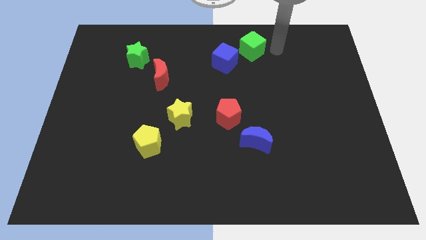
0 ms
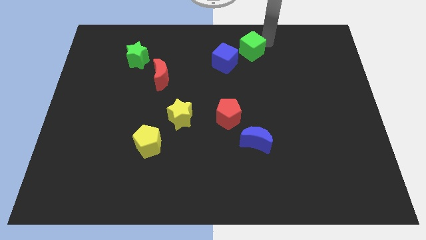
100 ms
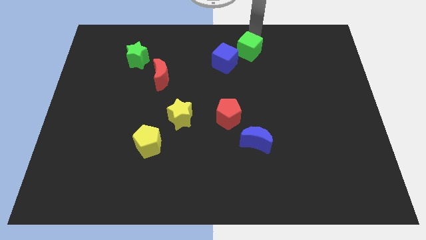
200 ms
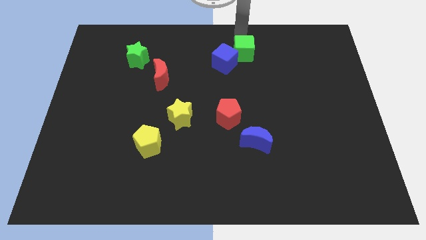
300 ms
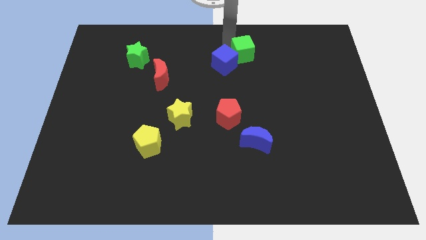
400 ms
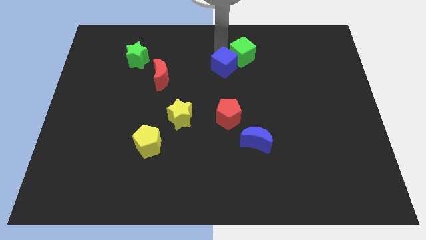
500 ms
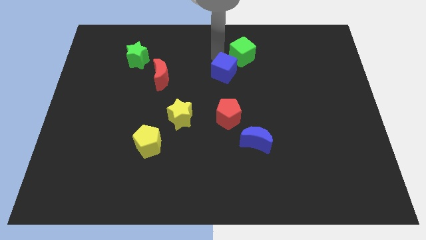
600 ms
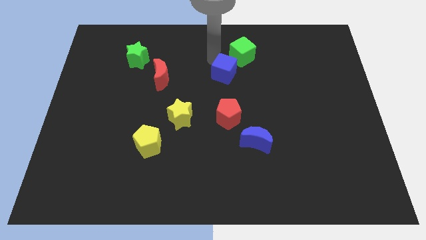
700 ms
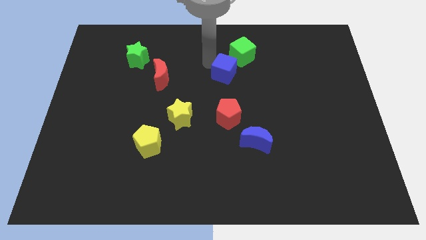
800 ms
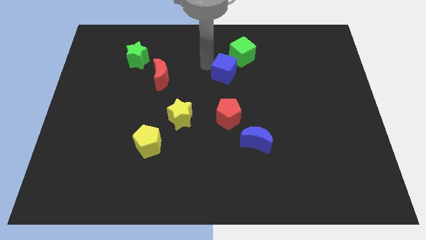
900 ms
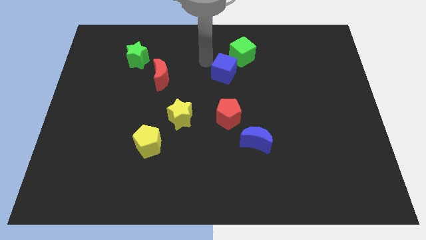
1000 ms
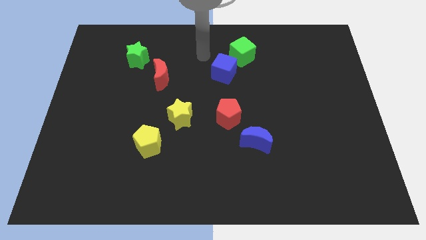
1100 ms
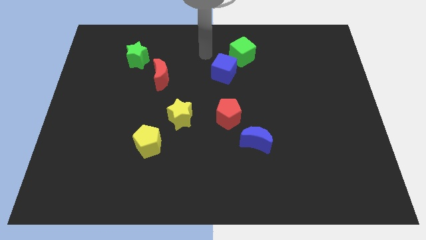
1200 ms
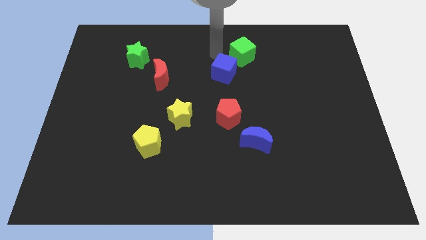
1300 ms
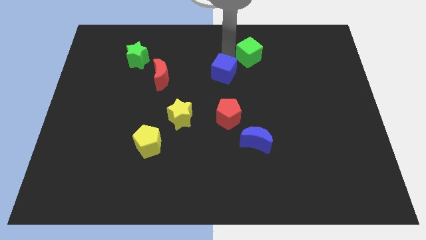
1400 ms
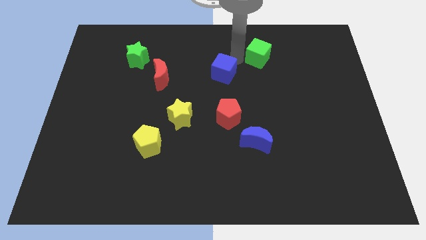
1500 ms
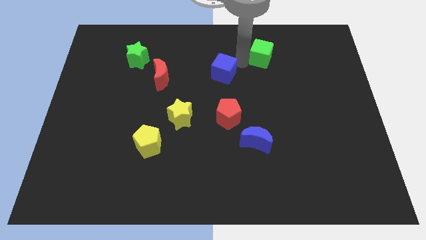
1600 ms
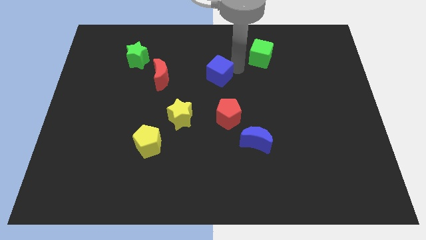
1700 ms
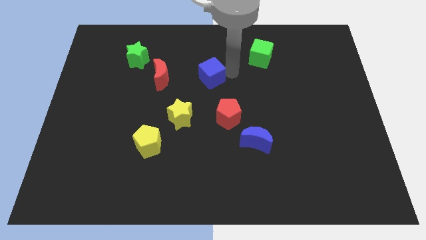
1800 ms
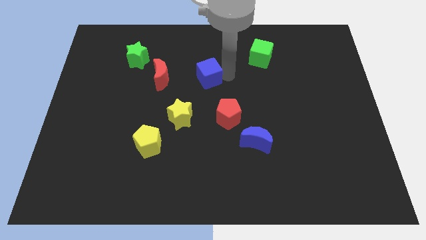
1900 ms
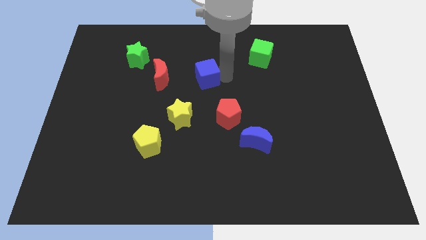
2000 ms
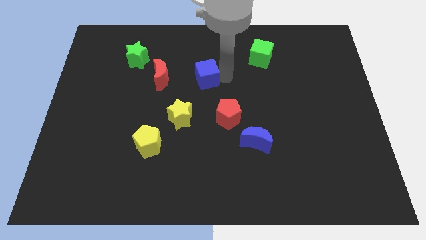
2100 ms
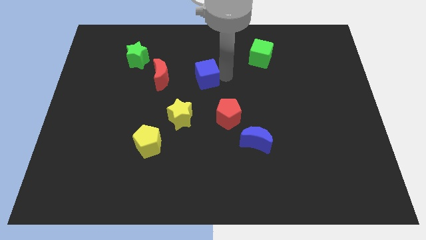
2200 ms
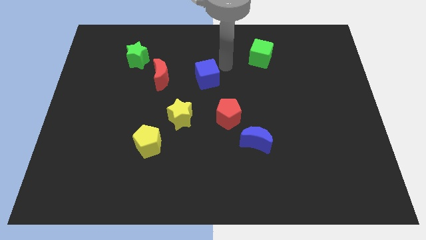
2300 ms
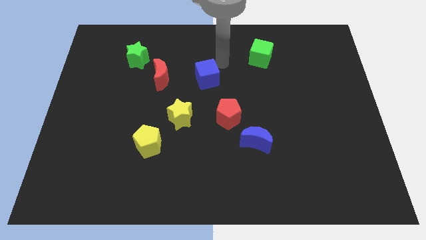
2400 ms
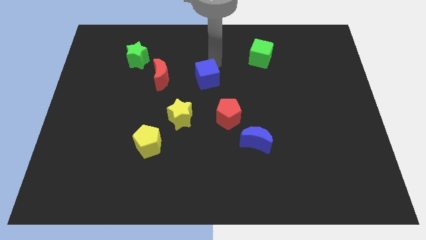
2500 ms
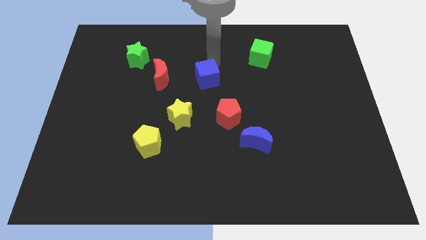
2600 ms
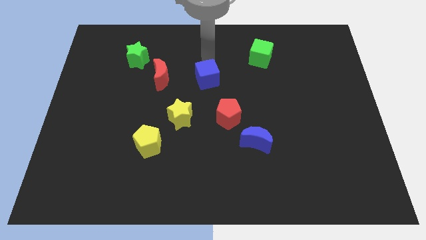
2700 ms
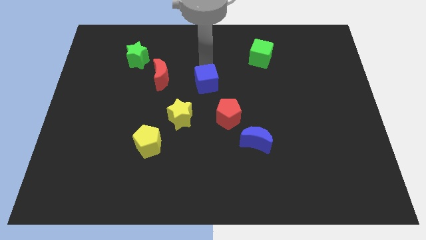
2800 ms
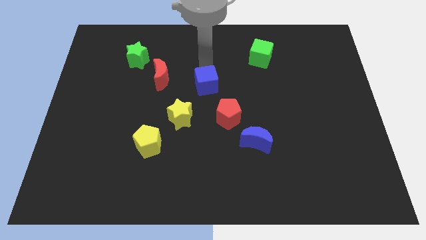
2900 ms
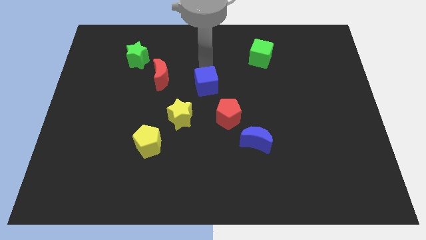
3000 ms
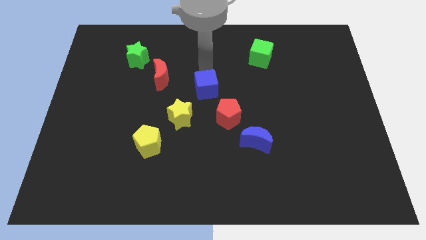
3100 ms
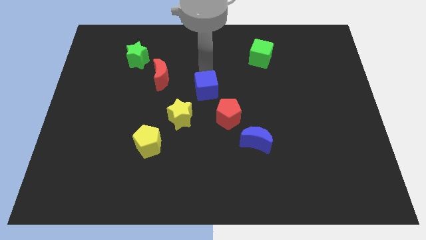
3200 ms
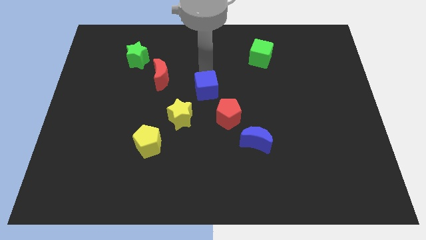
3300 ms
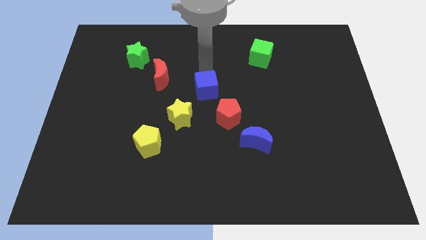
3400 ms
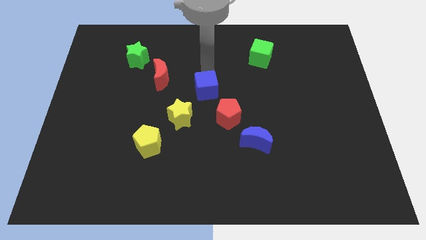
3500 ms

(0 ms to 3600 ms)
separate blue cube and green cube

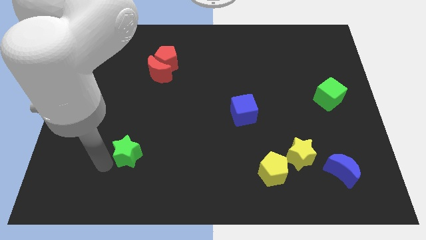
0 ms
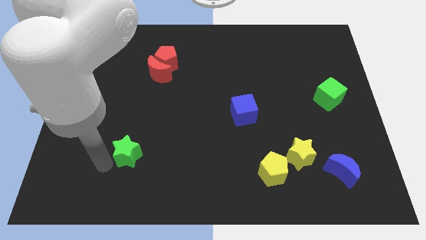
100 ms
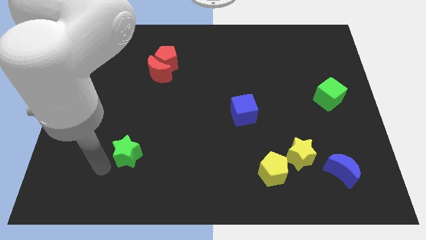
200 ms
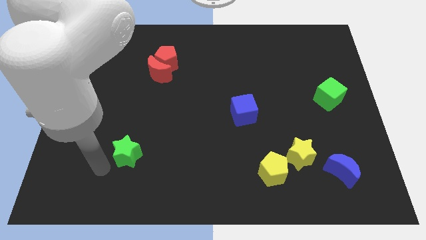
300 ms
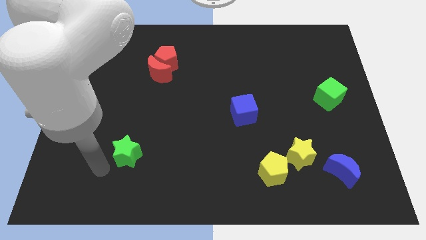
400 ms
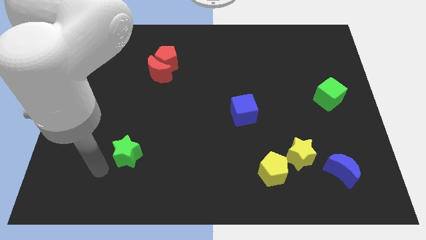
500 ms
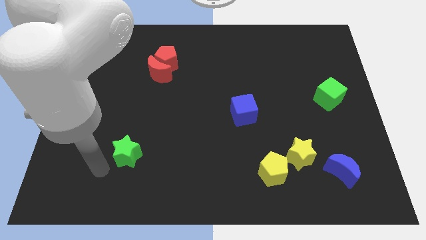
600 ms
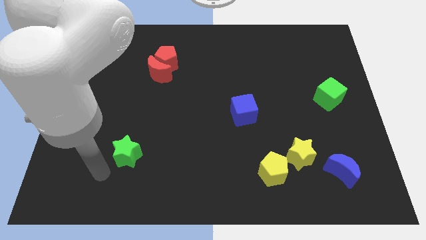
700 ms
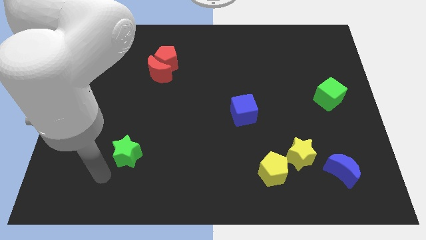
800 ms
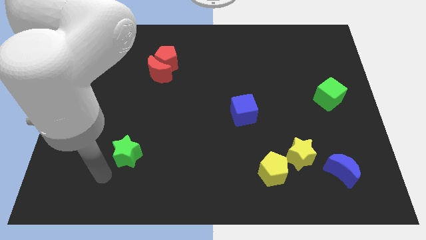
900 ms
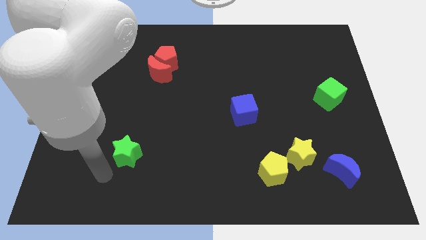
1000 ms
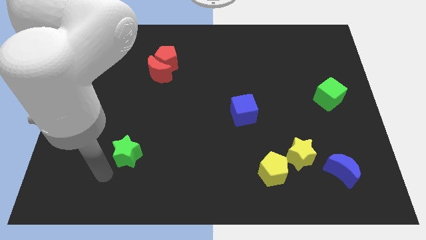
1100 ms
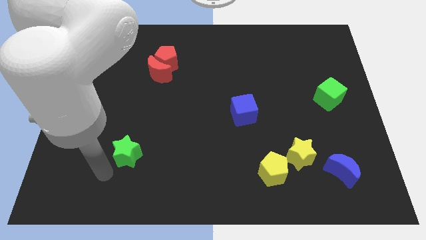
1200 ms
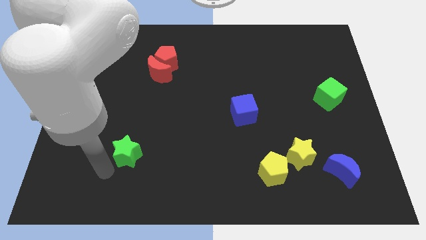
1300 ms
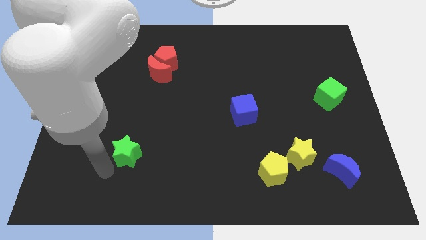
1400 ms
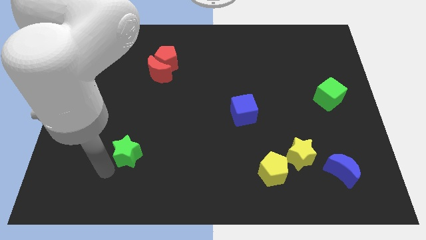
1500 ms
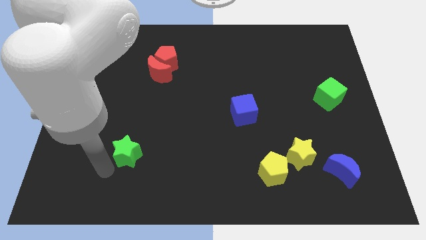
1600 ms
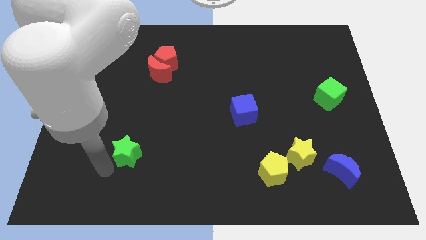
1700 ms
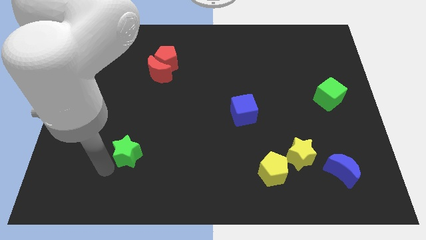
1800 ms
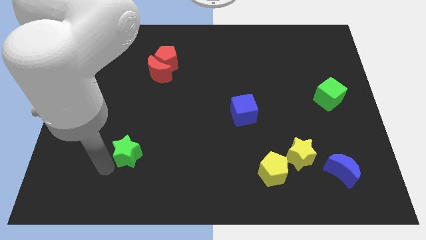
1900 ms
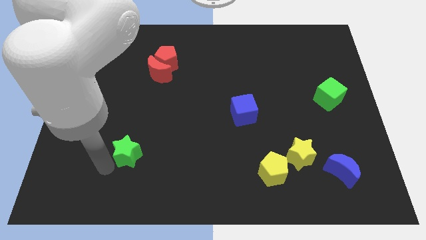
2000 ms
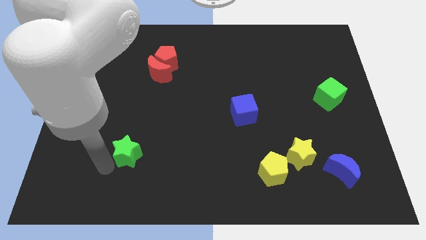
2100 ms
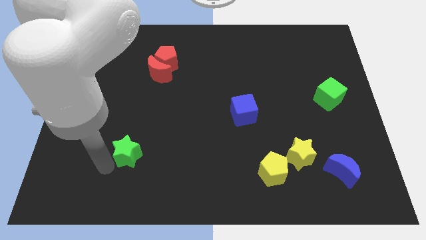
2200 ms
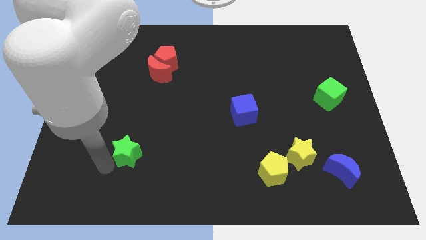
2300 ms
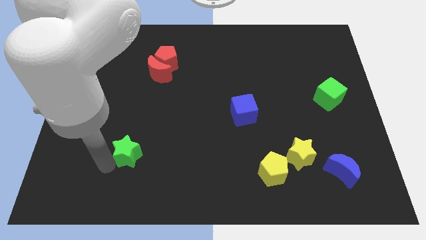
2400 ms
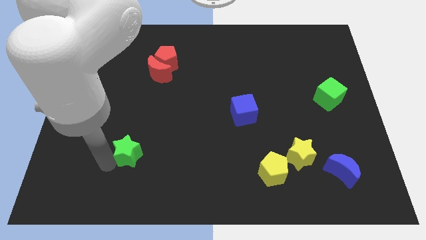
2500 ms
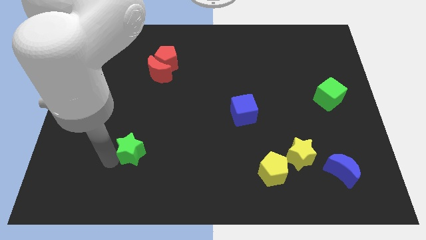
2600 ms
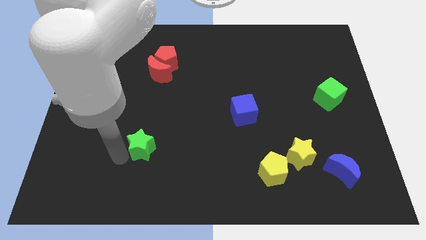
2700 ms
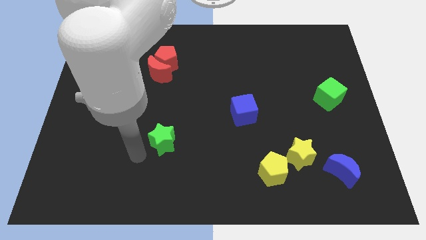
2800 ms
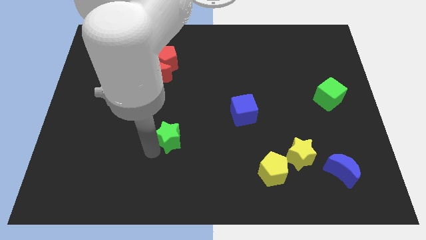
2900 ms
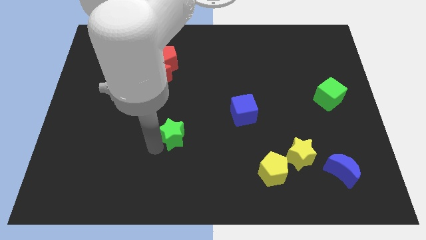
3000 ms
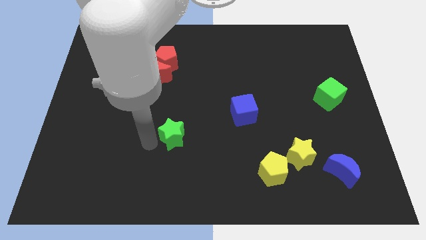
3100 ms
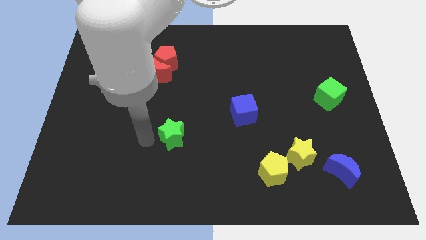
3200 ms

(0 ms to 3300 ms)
push the green star towards blue cube

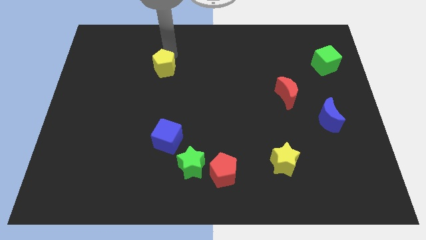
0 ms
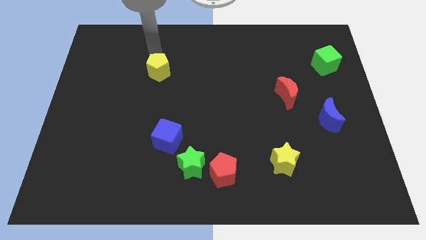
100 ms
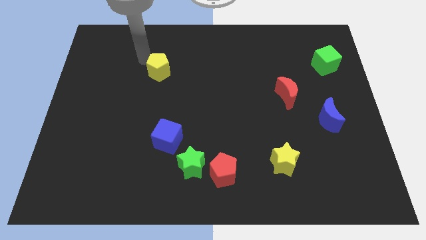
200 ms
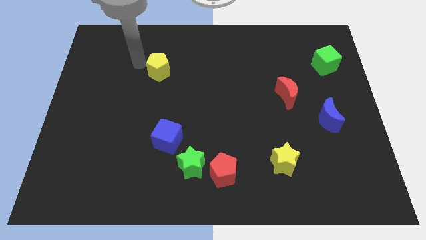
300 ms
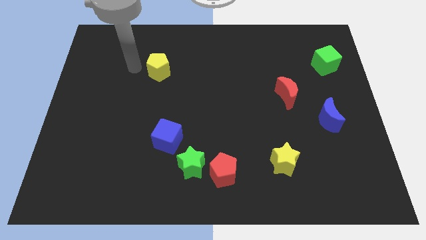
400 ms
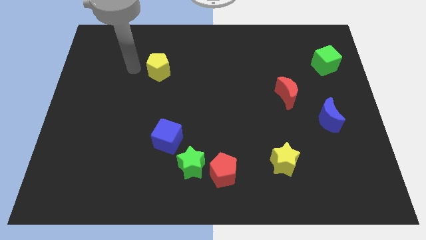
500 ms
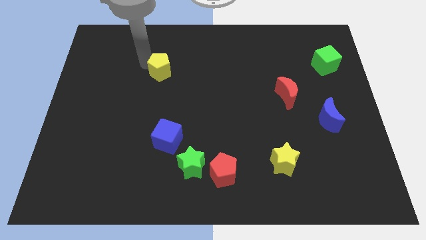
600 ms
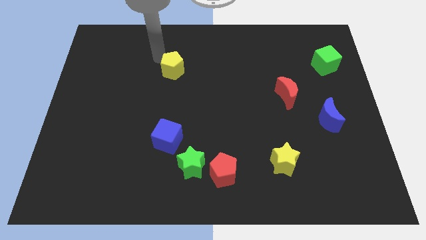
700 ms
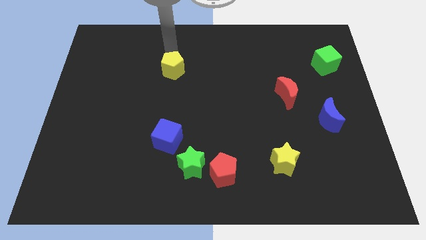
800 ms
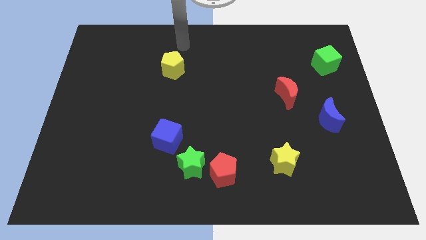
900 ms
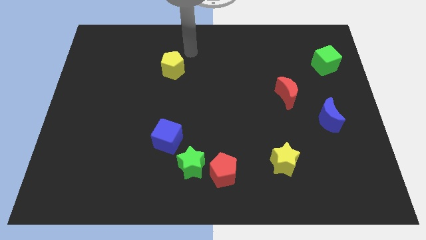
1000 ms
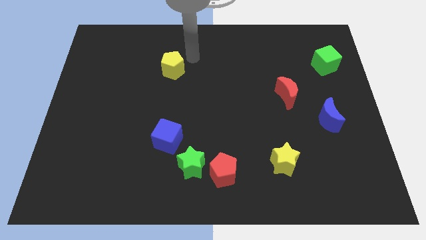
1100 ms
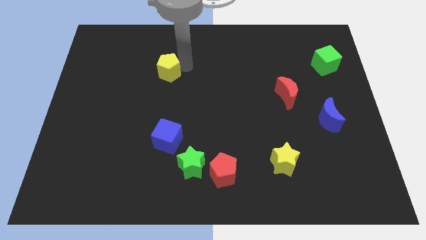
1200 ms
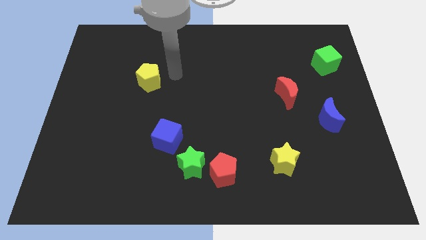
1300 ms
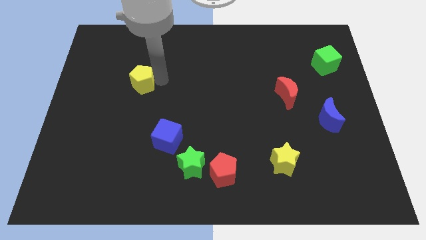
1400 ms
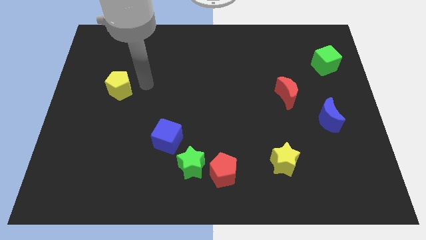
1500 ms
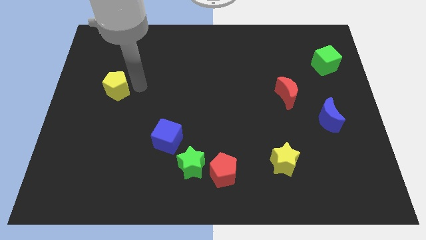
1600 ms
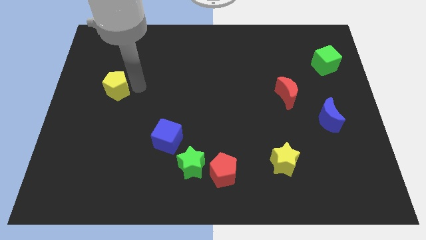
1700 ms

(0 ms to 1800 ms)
move the yellow pentagon diagonal above blue cube

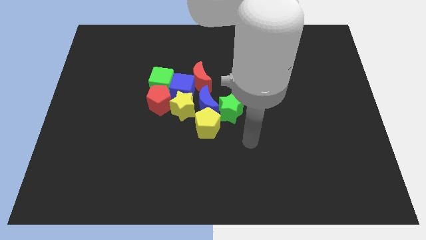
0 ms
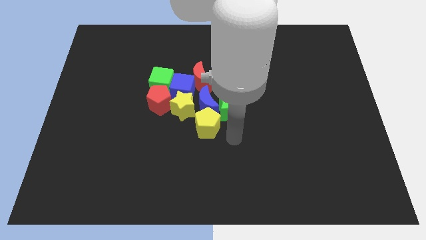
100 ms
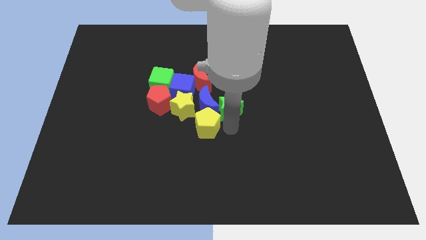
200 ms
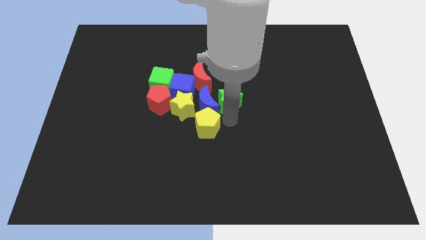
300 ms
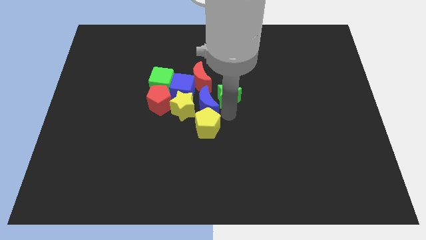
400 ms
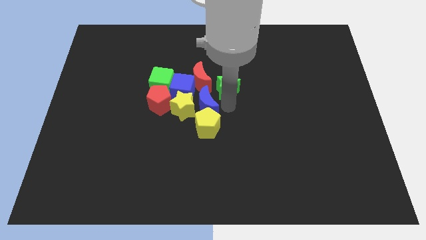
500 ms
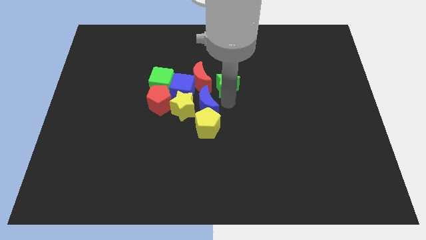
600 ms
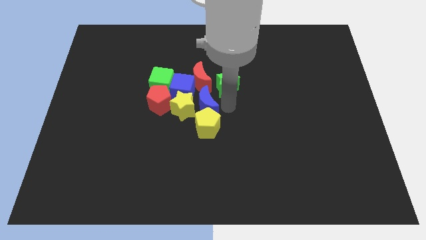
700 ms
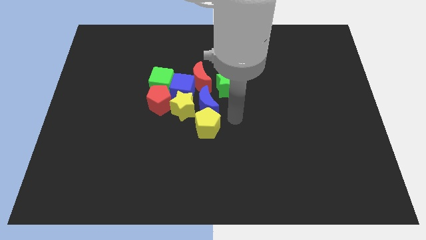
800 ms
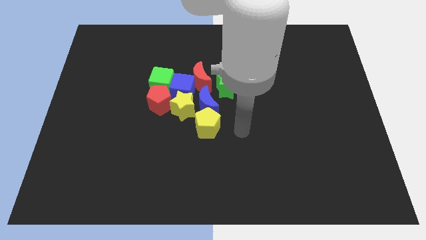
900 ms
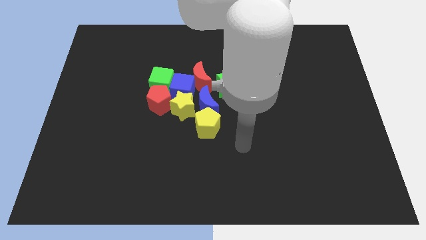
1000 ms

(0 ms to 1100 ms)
slightly move the green star towards up
